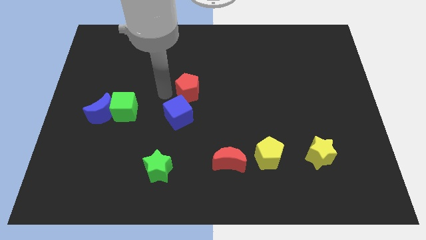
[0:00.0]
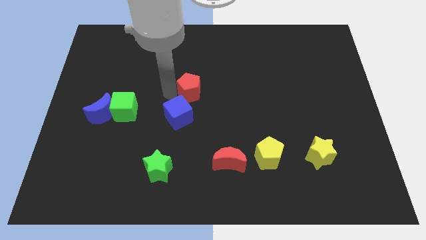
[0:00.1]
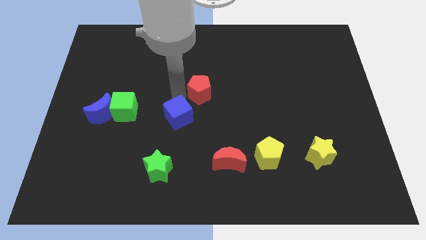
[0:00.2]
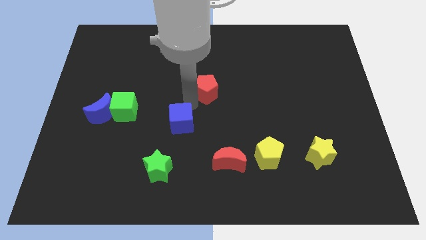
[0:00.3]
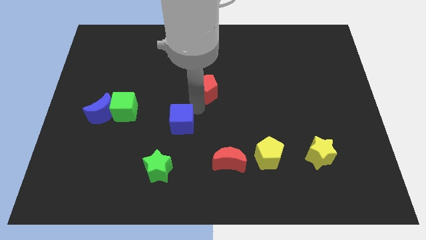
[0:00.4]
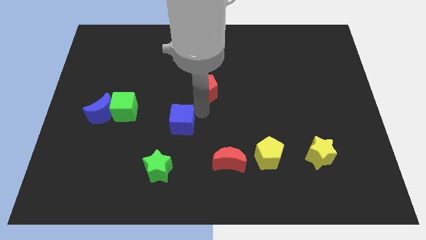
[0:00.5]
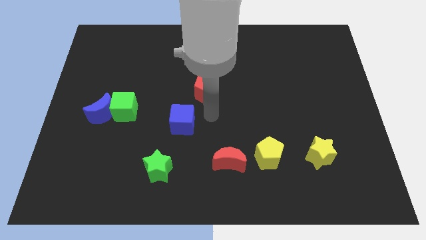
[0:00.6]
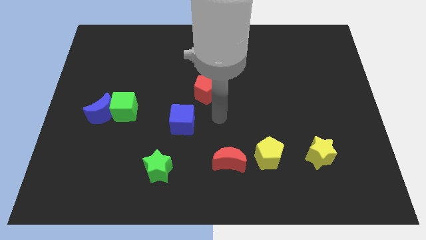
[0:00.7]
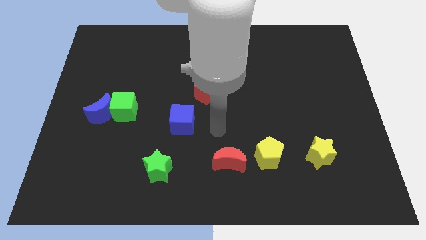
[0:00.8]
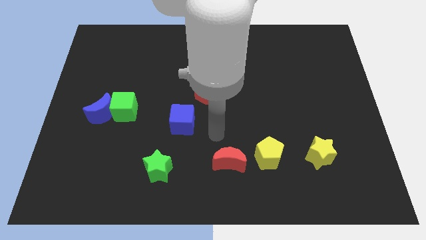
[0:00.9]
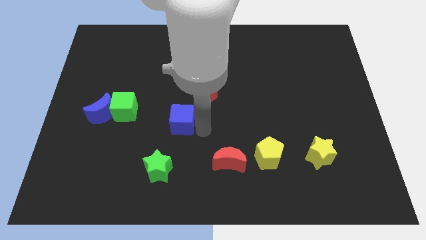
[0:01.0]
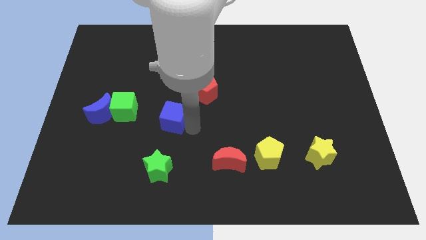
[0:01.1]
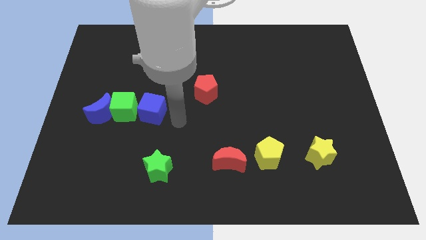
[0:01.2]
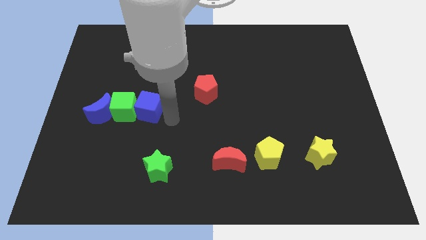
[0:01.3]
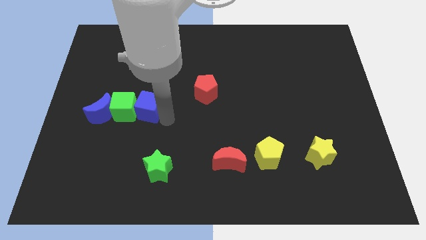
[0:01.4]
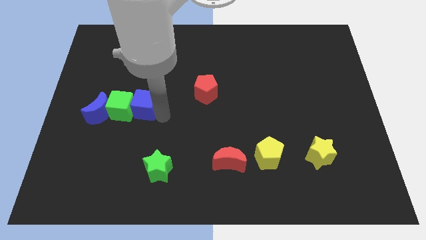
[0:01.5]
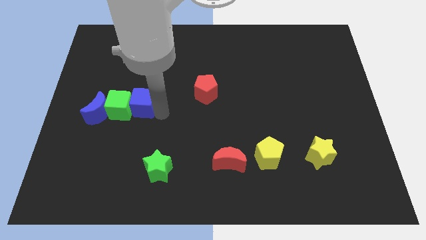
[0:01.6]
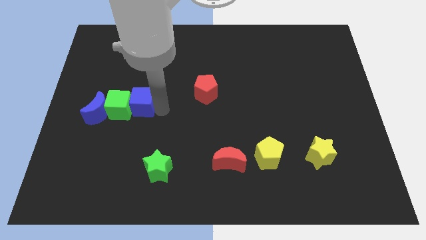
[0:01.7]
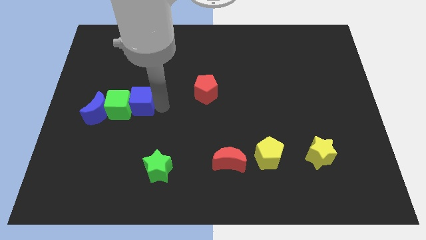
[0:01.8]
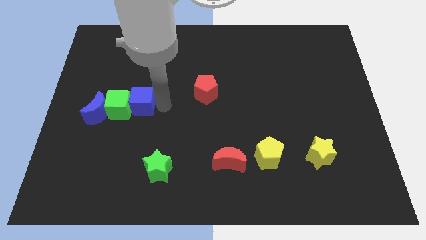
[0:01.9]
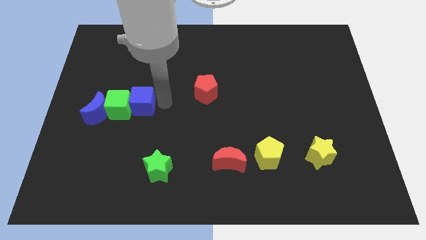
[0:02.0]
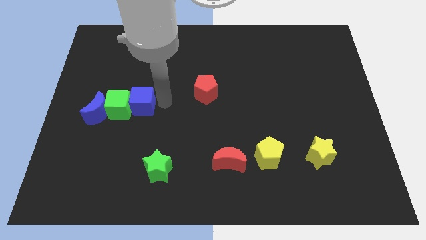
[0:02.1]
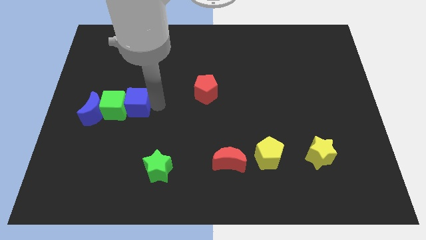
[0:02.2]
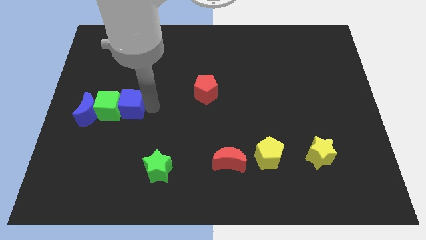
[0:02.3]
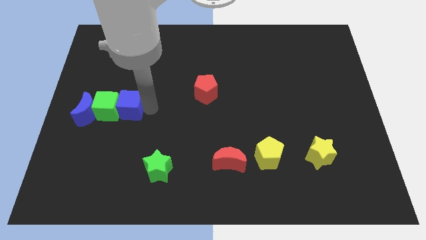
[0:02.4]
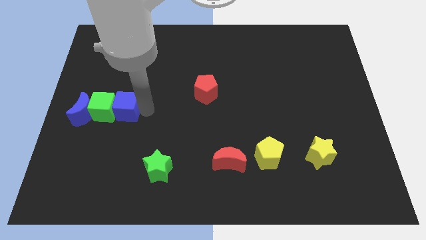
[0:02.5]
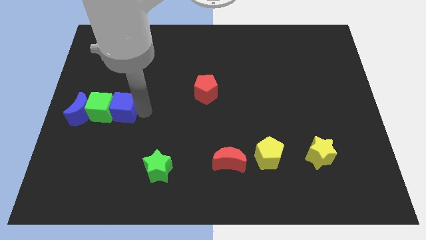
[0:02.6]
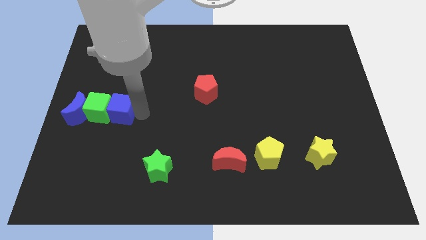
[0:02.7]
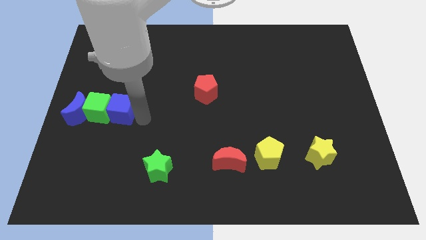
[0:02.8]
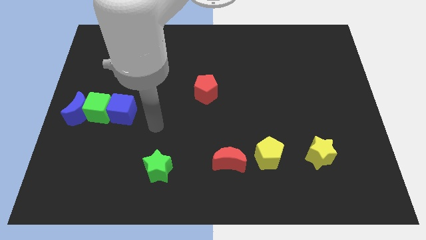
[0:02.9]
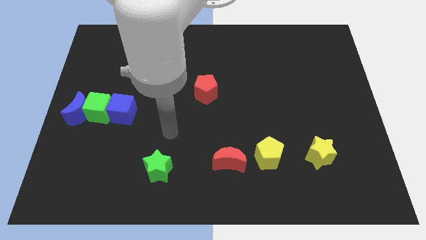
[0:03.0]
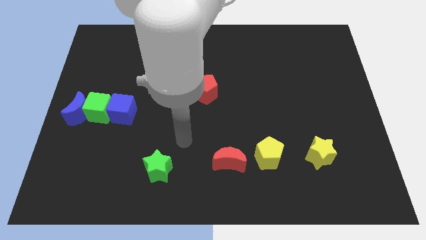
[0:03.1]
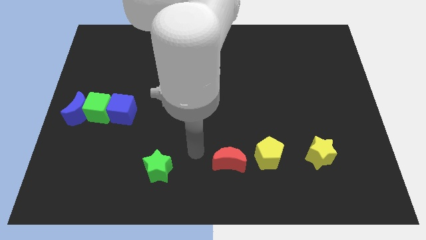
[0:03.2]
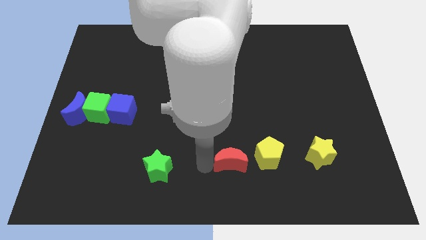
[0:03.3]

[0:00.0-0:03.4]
separate blue cube from red pentagon

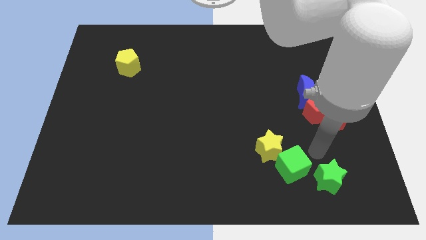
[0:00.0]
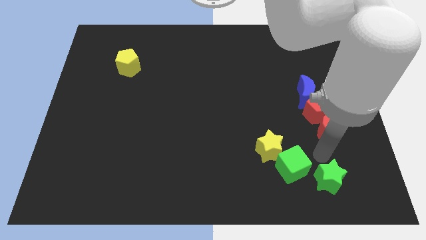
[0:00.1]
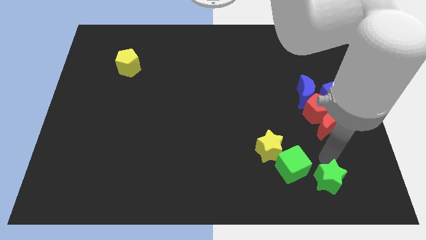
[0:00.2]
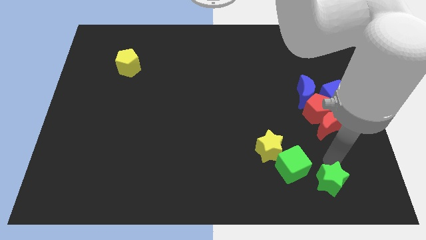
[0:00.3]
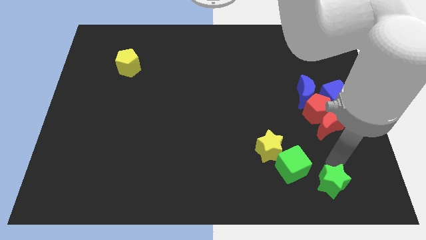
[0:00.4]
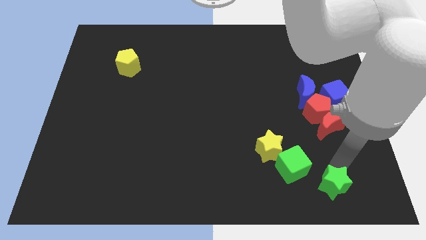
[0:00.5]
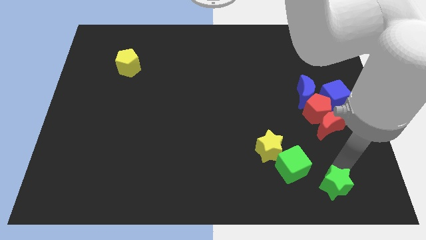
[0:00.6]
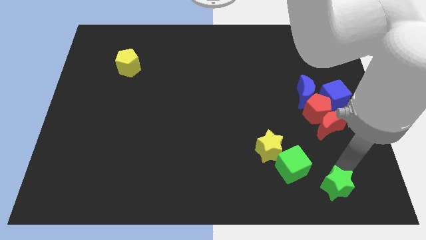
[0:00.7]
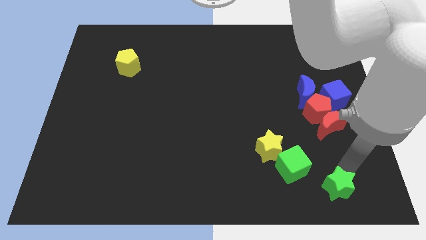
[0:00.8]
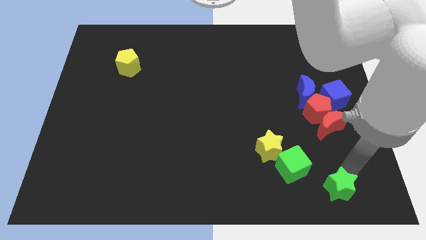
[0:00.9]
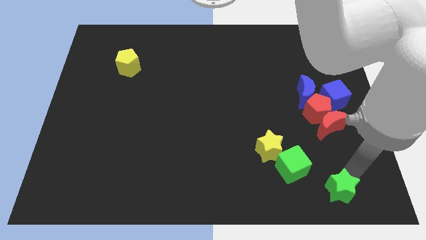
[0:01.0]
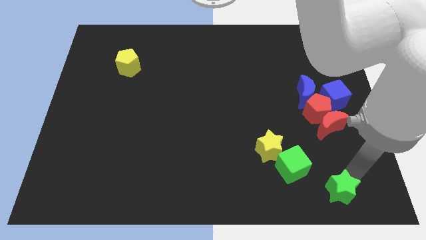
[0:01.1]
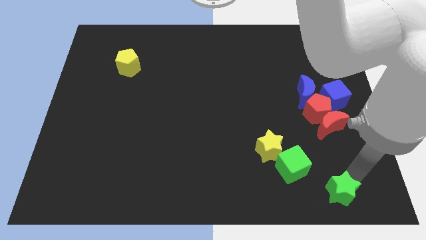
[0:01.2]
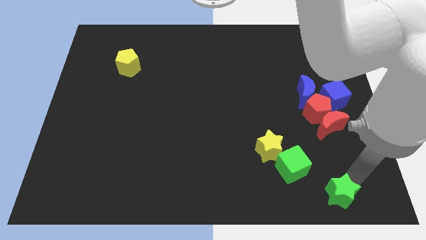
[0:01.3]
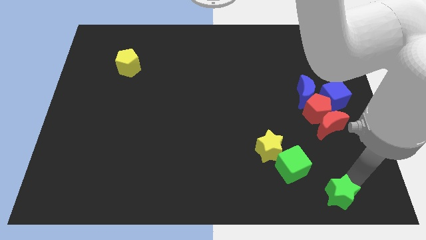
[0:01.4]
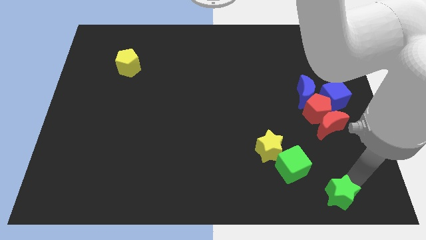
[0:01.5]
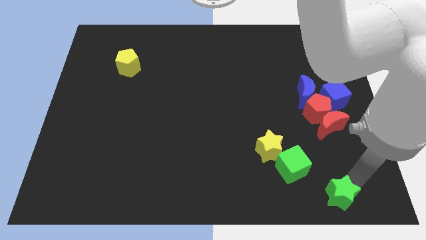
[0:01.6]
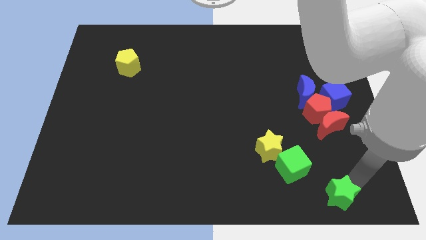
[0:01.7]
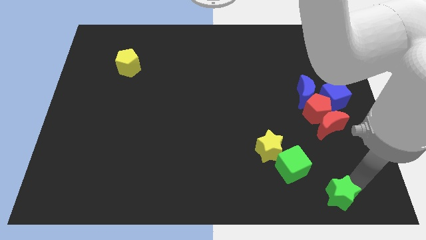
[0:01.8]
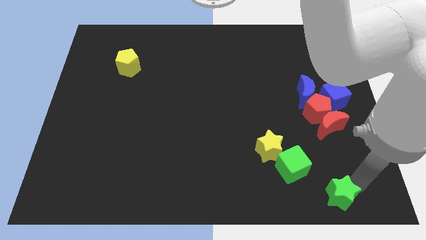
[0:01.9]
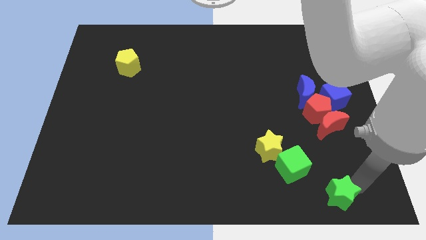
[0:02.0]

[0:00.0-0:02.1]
separate green star from green cube

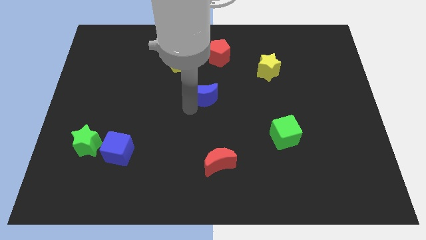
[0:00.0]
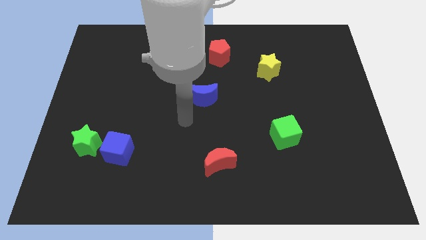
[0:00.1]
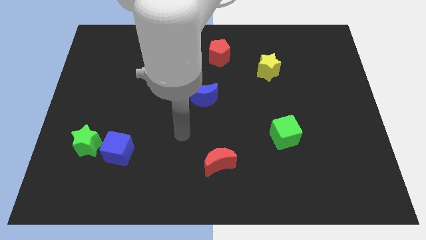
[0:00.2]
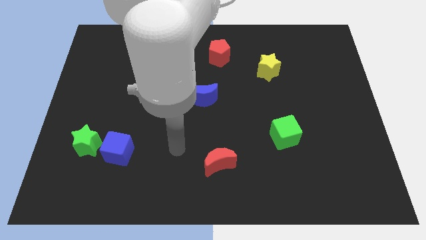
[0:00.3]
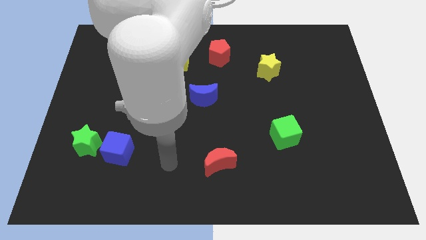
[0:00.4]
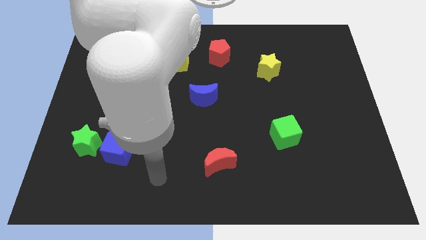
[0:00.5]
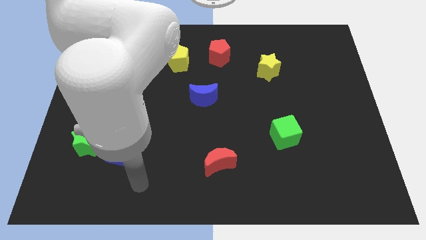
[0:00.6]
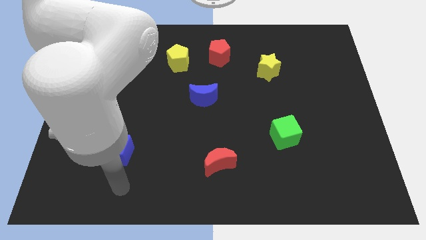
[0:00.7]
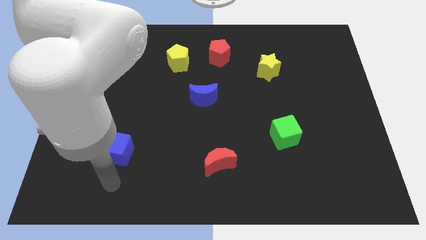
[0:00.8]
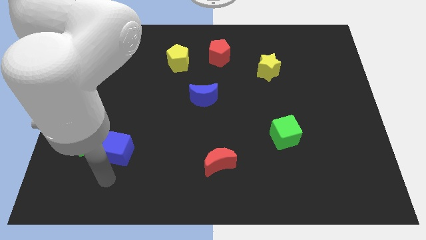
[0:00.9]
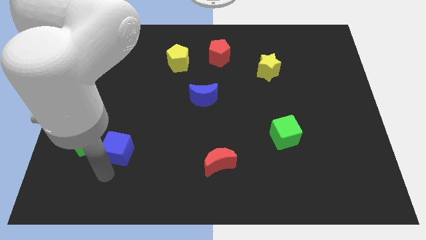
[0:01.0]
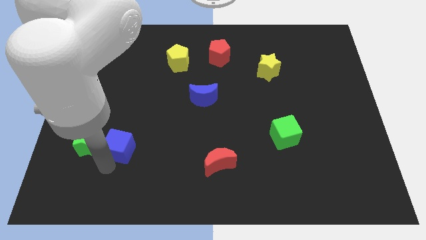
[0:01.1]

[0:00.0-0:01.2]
point the arm below the blue cube

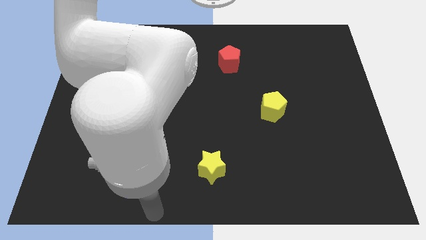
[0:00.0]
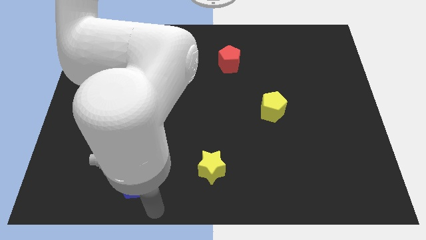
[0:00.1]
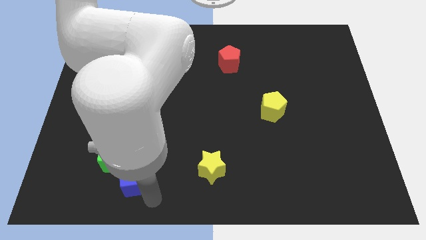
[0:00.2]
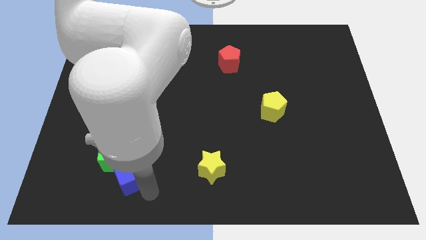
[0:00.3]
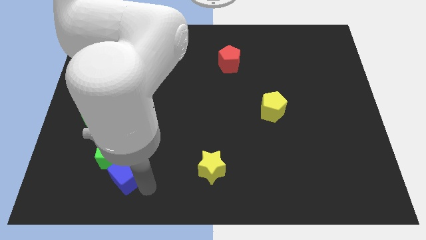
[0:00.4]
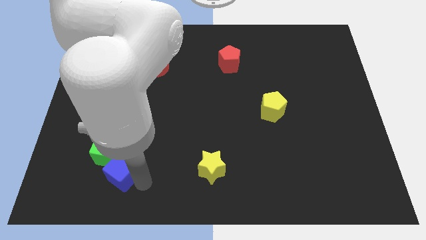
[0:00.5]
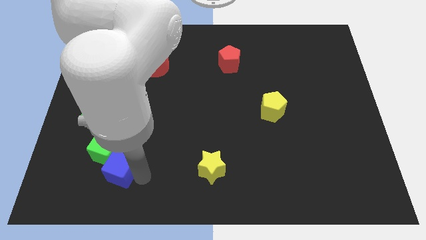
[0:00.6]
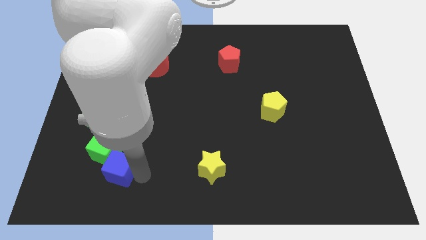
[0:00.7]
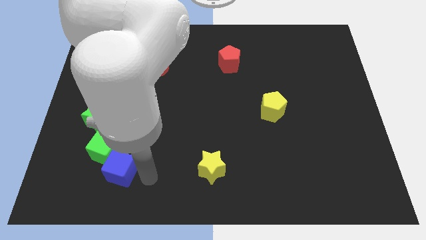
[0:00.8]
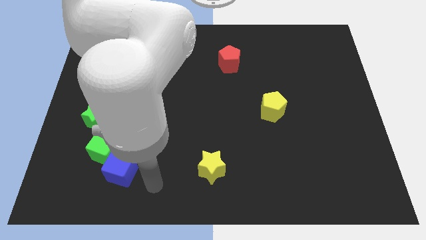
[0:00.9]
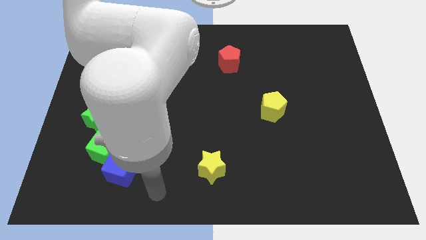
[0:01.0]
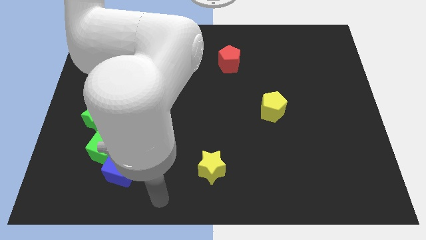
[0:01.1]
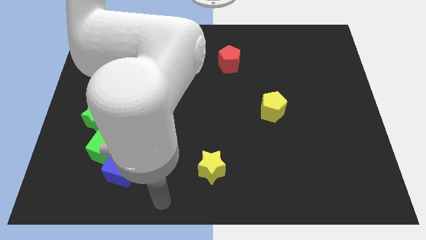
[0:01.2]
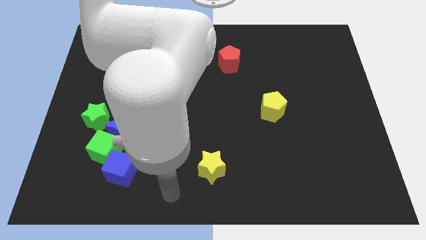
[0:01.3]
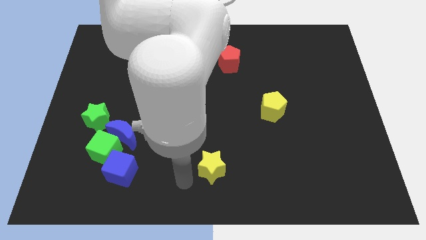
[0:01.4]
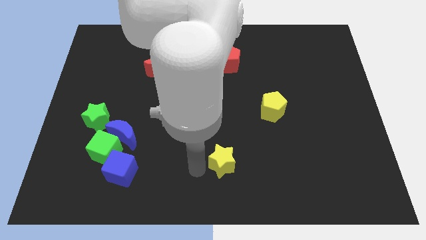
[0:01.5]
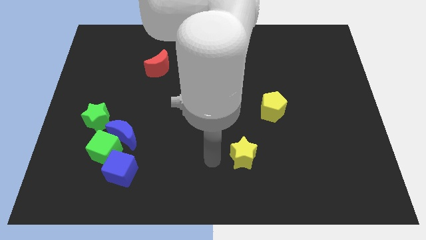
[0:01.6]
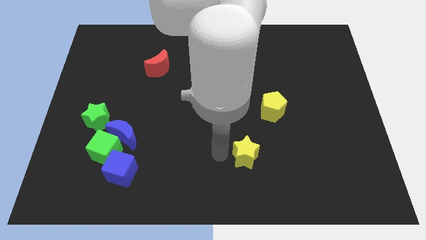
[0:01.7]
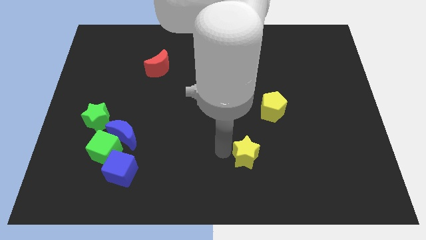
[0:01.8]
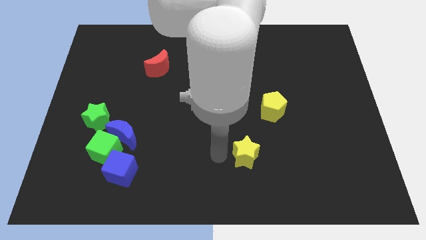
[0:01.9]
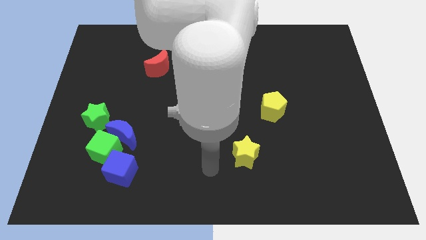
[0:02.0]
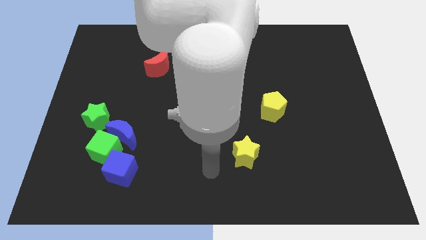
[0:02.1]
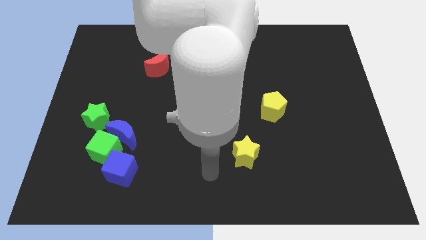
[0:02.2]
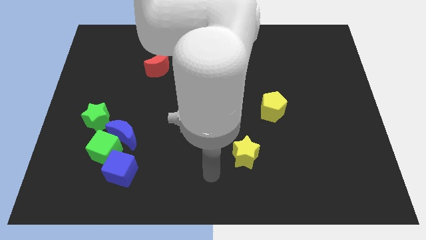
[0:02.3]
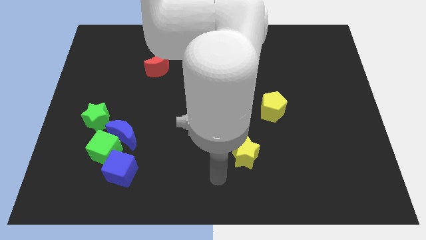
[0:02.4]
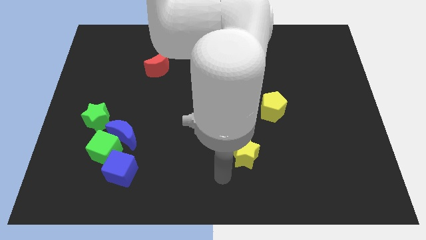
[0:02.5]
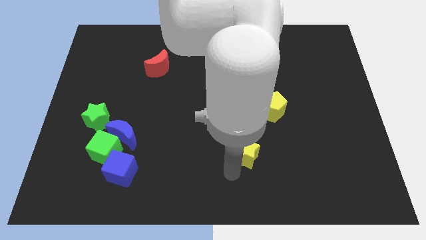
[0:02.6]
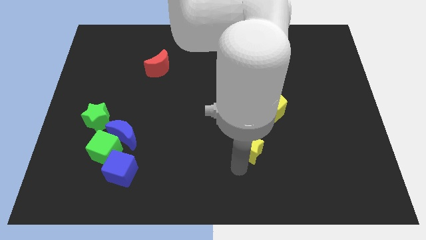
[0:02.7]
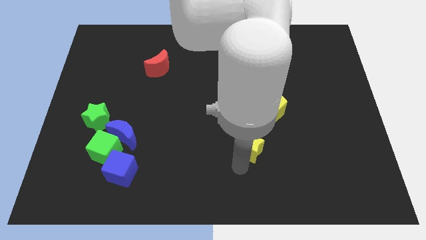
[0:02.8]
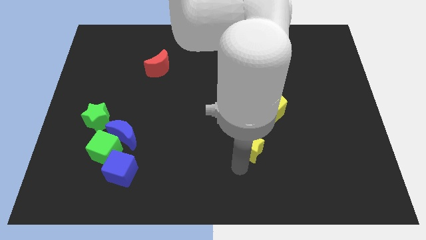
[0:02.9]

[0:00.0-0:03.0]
push the yellow star towards the yellow pentagon
